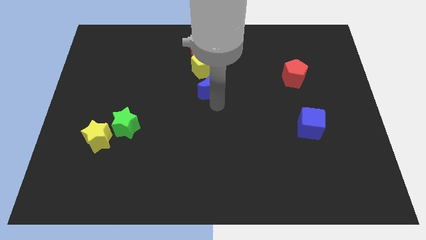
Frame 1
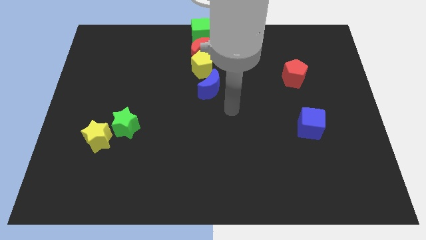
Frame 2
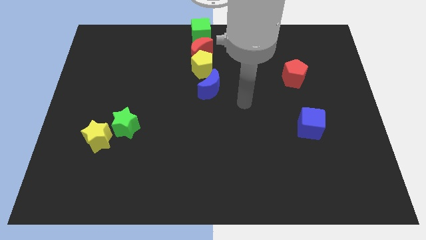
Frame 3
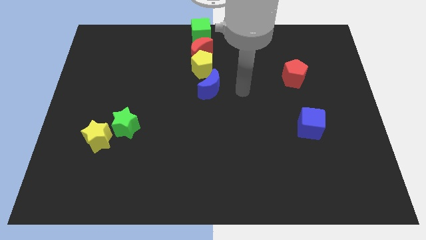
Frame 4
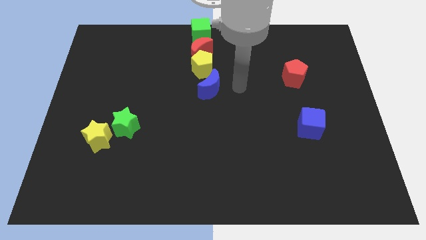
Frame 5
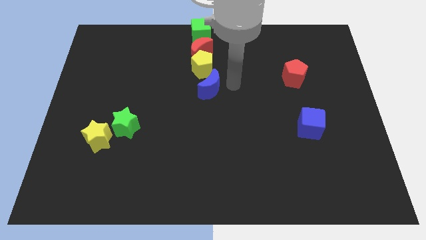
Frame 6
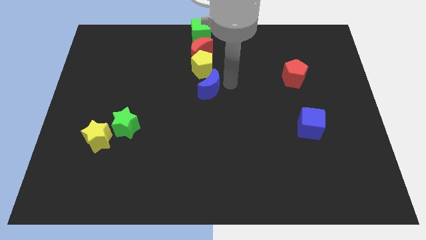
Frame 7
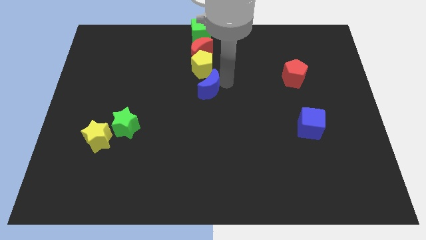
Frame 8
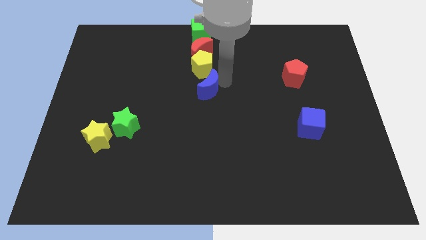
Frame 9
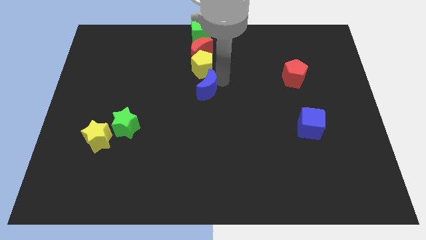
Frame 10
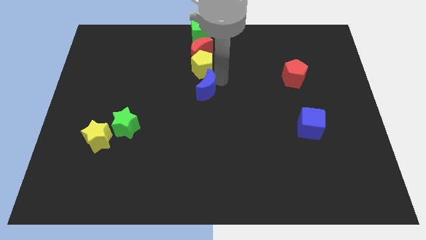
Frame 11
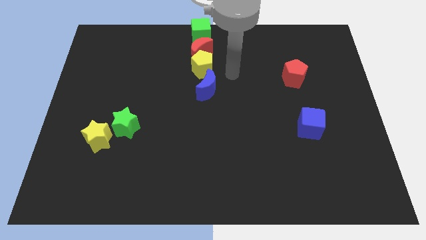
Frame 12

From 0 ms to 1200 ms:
push the blue crescent slightly to the left

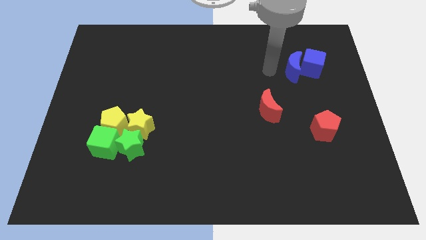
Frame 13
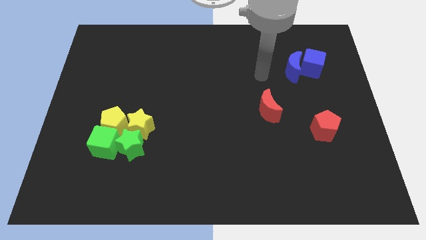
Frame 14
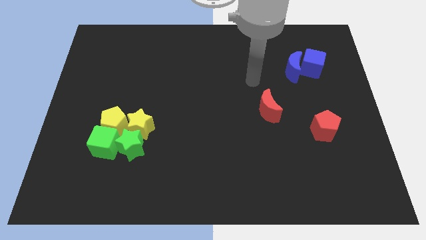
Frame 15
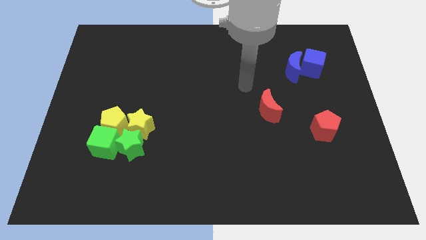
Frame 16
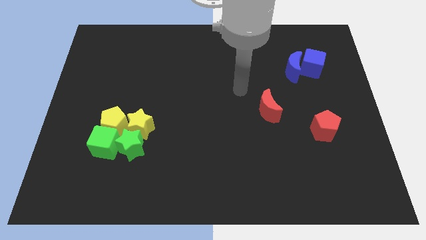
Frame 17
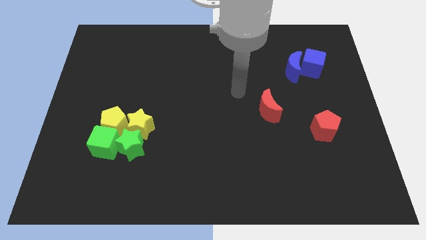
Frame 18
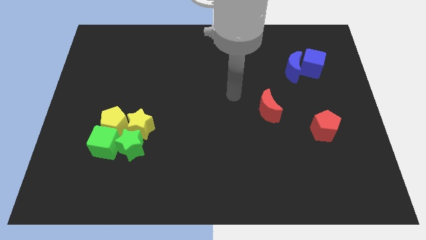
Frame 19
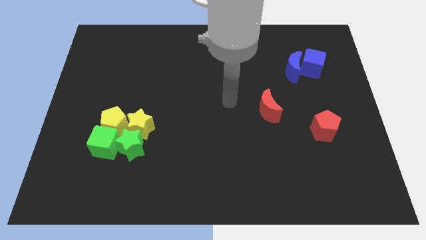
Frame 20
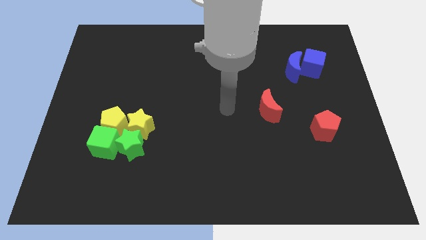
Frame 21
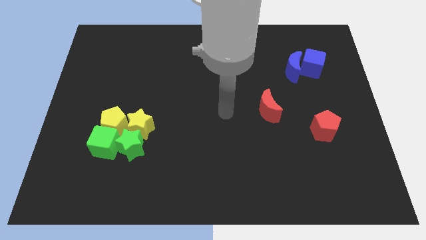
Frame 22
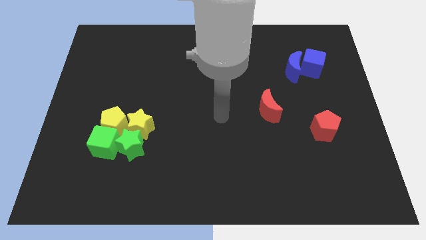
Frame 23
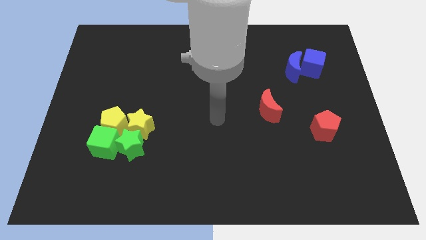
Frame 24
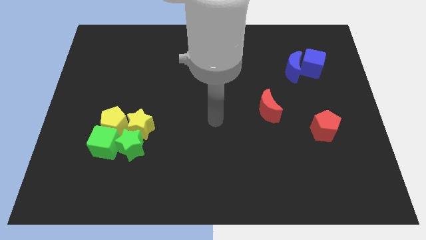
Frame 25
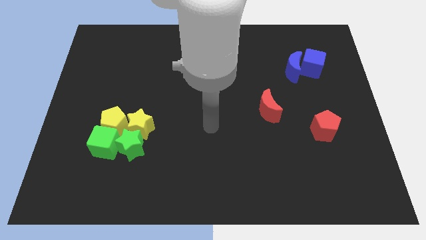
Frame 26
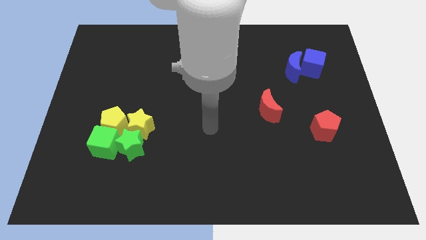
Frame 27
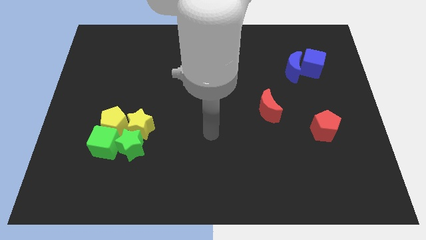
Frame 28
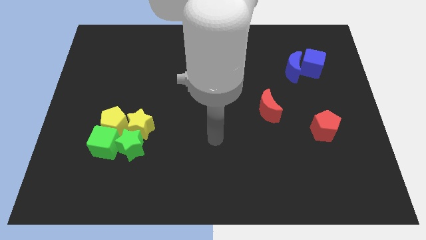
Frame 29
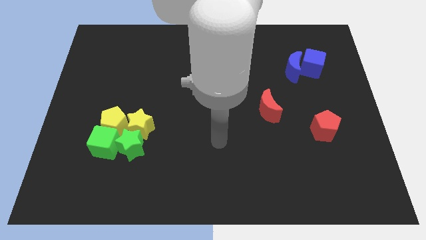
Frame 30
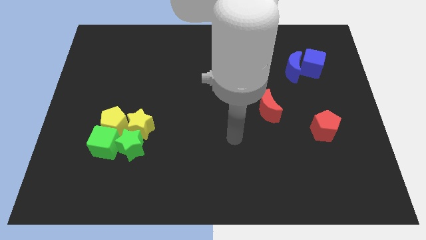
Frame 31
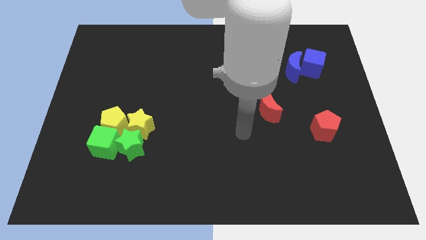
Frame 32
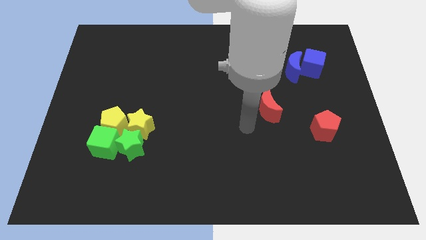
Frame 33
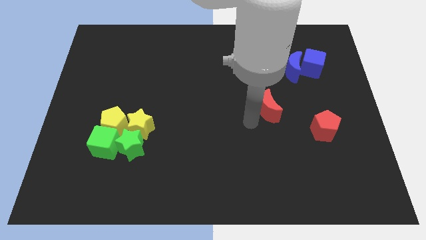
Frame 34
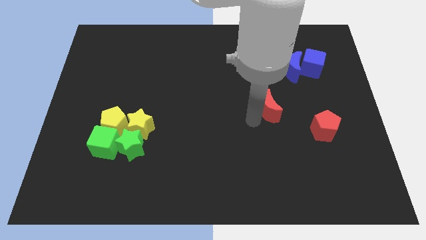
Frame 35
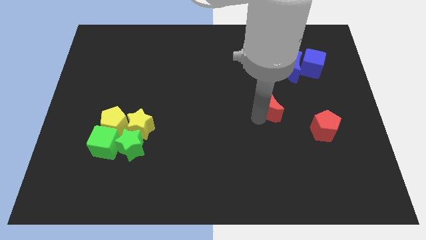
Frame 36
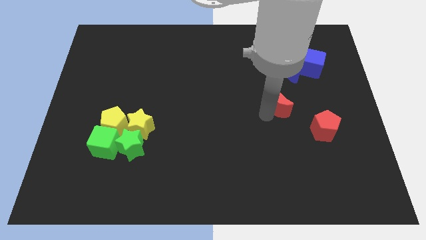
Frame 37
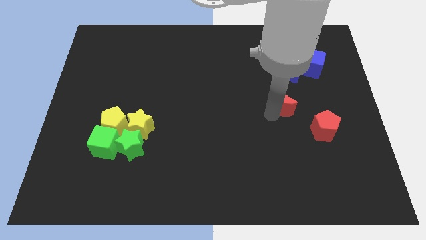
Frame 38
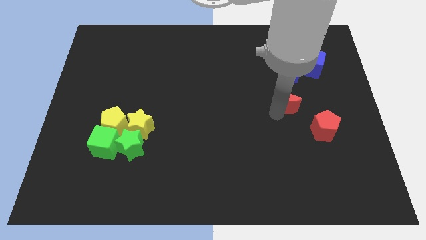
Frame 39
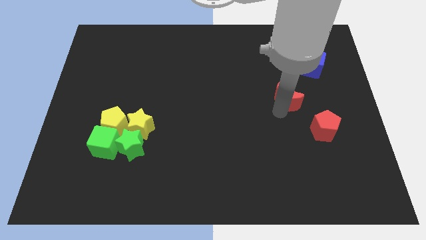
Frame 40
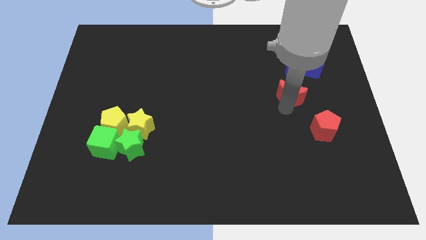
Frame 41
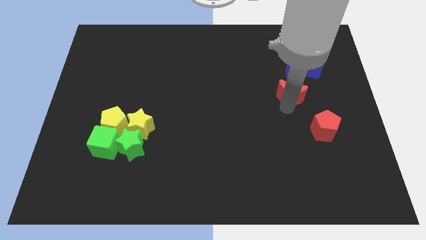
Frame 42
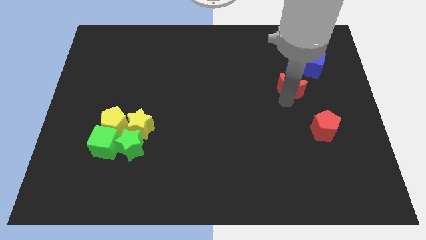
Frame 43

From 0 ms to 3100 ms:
push the red crescent to the bottom of the blue crescent

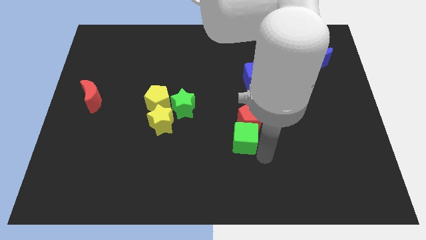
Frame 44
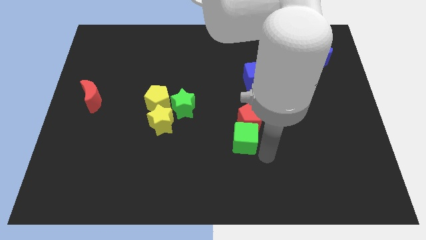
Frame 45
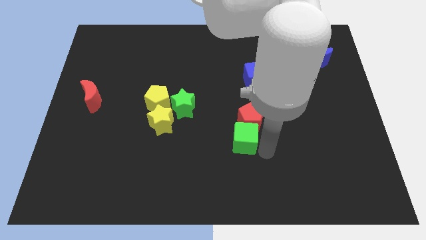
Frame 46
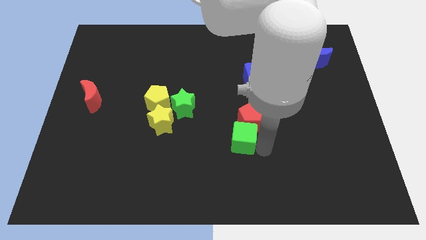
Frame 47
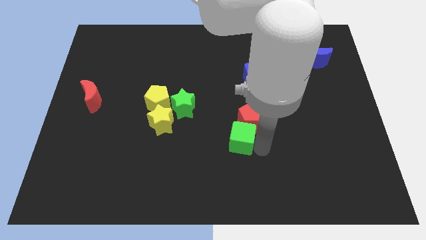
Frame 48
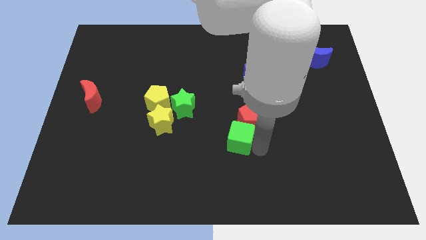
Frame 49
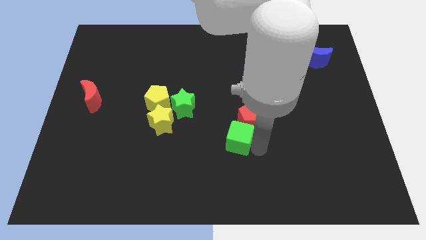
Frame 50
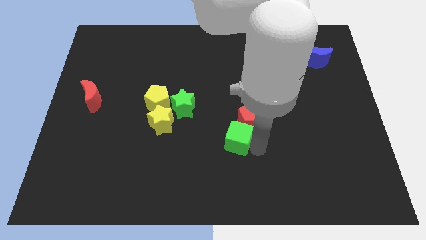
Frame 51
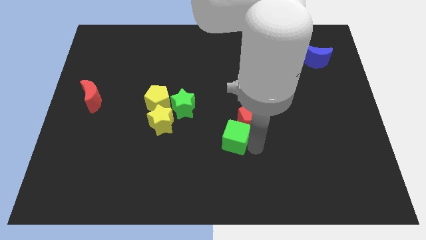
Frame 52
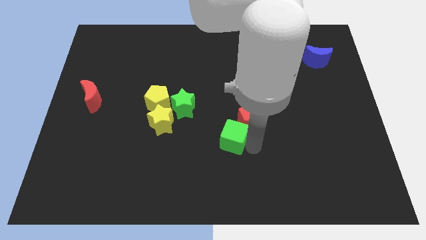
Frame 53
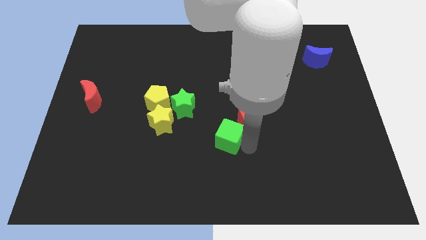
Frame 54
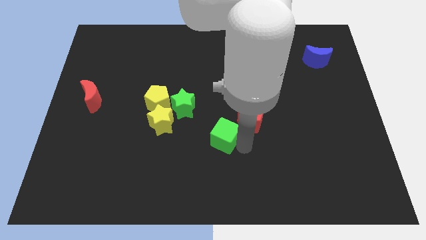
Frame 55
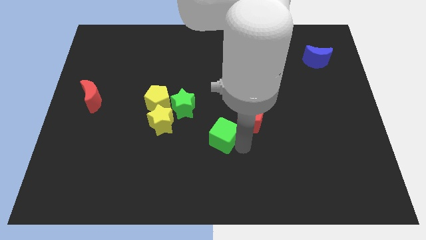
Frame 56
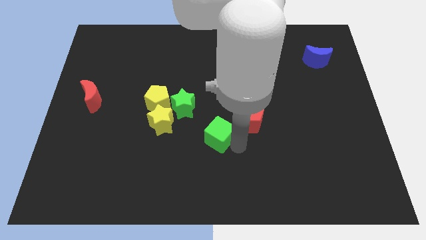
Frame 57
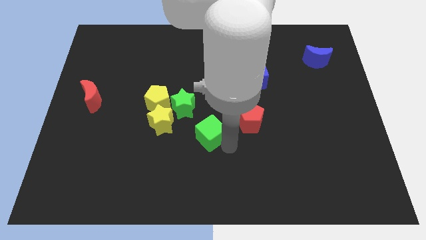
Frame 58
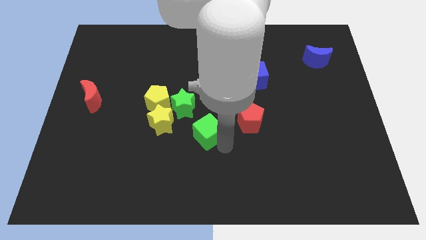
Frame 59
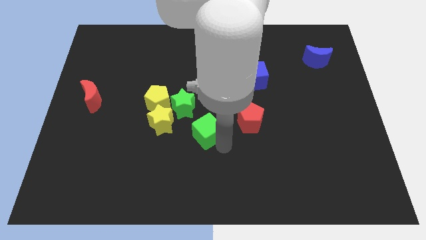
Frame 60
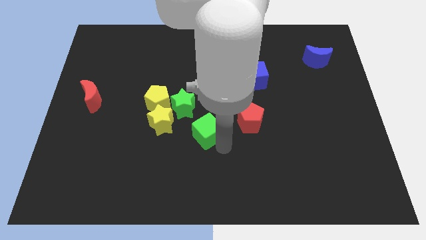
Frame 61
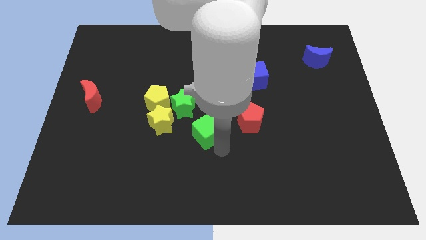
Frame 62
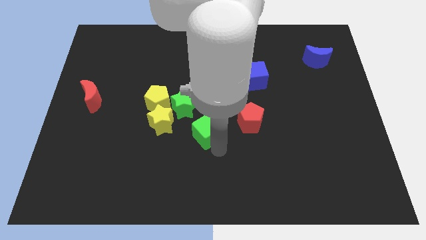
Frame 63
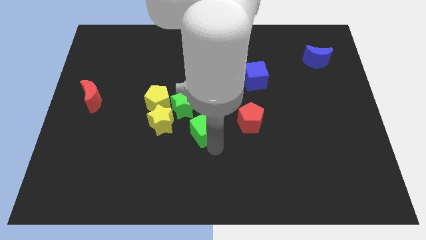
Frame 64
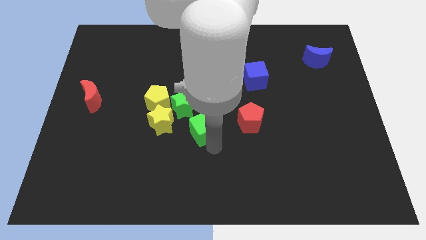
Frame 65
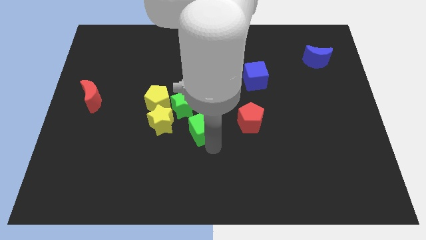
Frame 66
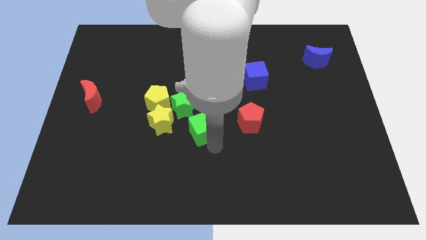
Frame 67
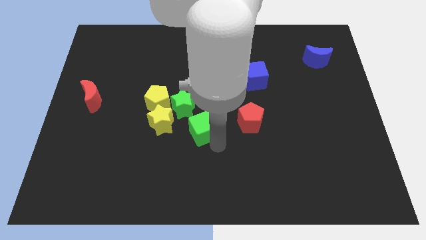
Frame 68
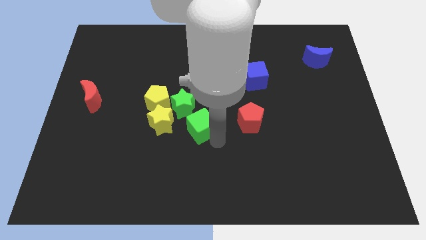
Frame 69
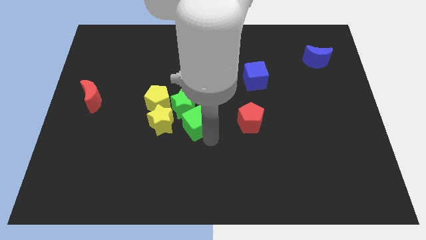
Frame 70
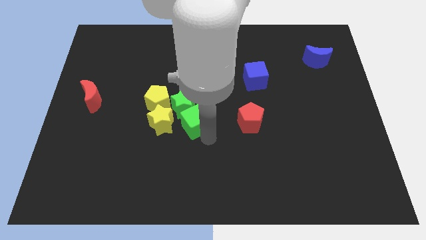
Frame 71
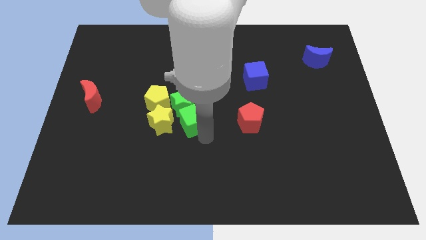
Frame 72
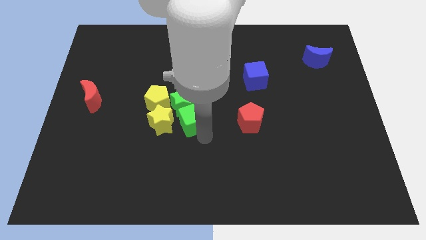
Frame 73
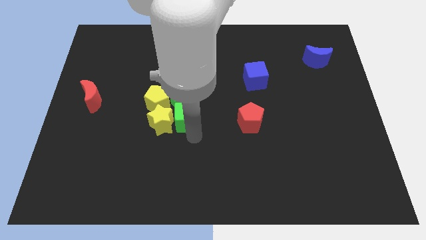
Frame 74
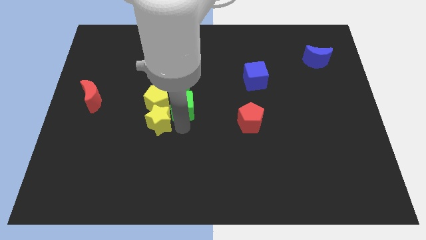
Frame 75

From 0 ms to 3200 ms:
move the green cube to the bottom of the green star

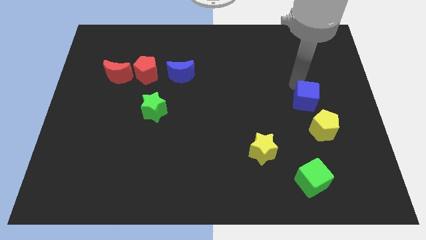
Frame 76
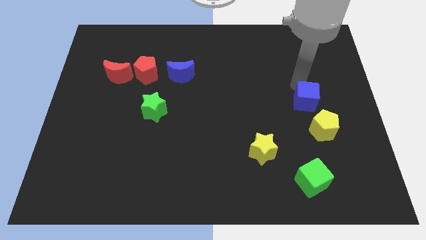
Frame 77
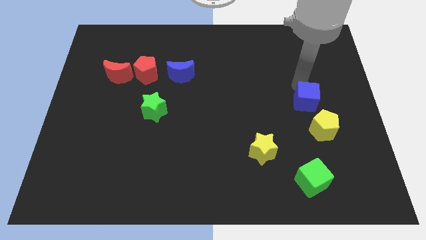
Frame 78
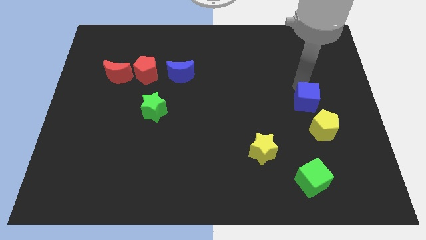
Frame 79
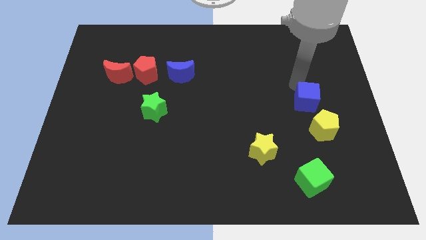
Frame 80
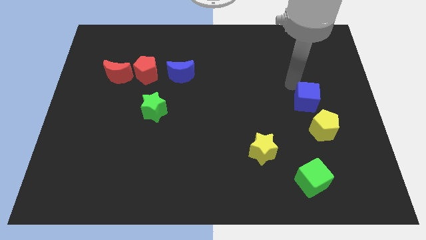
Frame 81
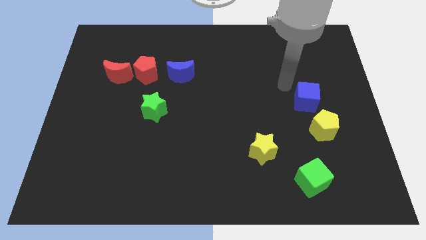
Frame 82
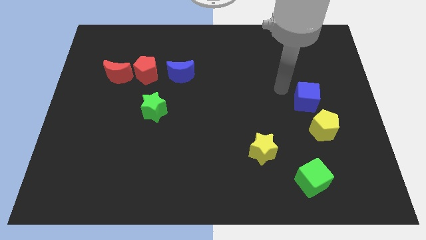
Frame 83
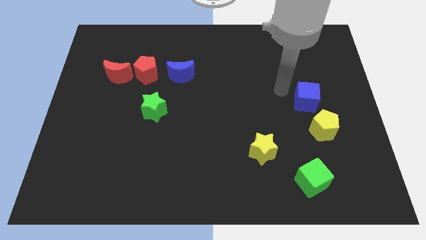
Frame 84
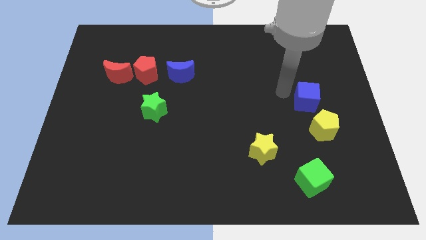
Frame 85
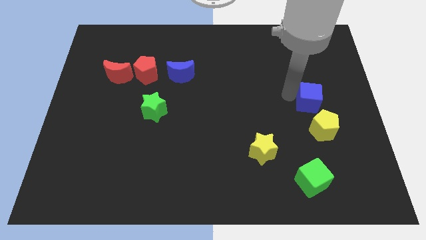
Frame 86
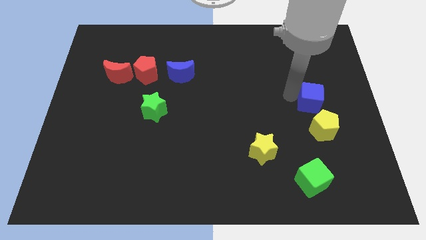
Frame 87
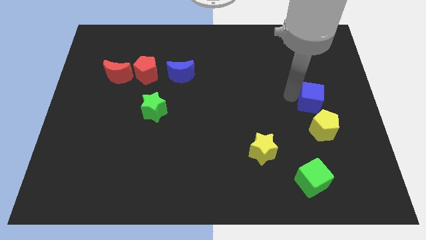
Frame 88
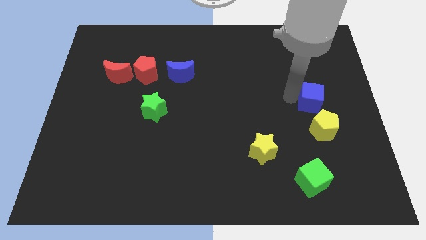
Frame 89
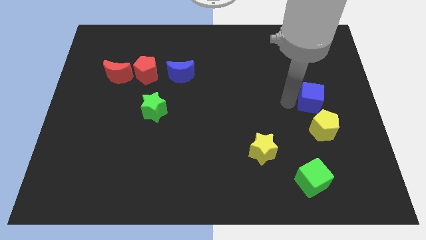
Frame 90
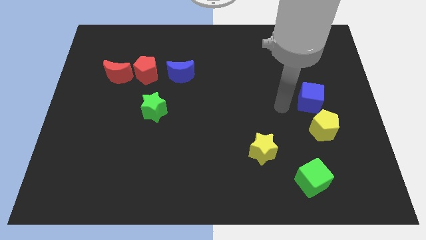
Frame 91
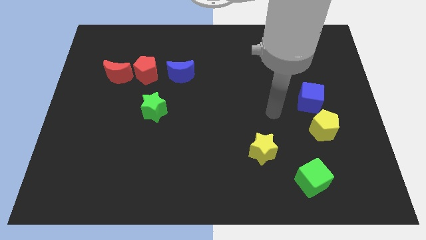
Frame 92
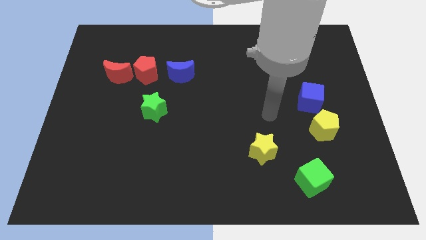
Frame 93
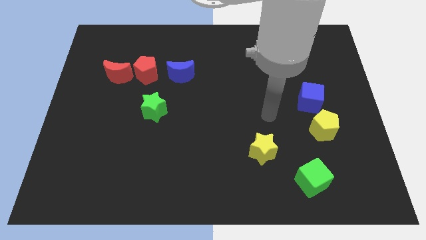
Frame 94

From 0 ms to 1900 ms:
move the blue cube towards the yellow pentagon
